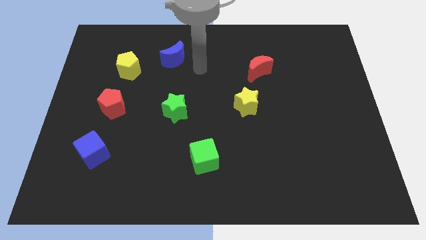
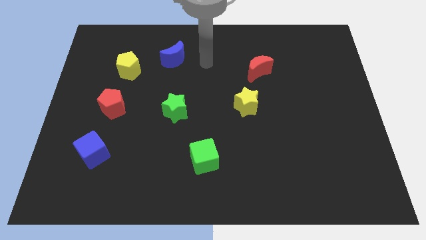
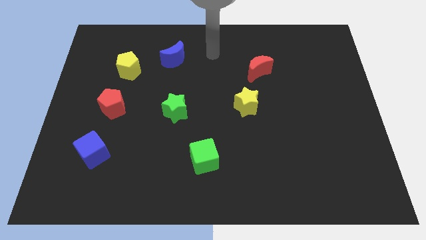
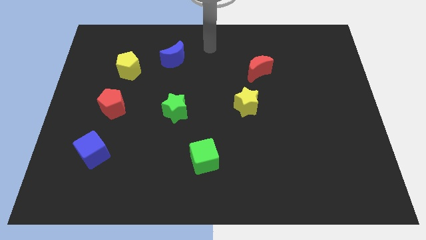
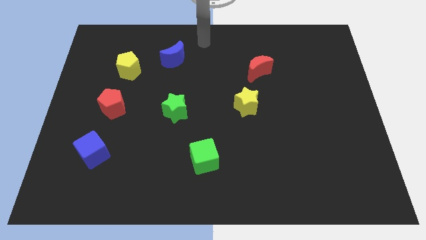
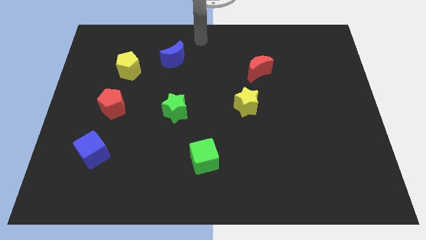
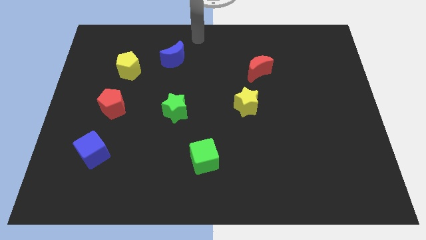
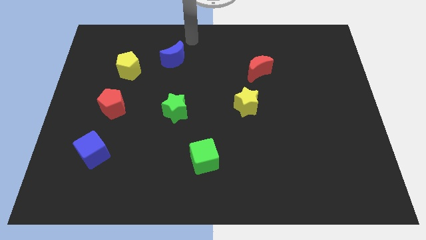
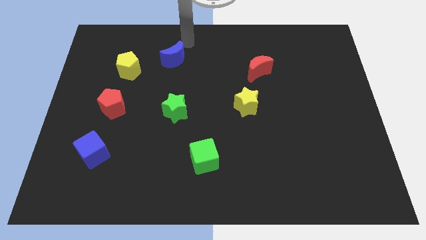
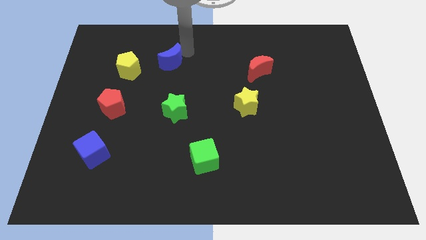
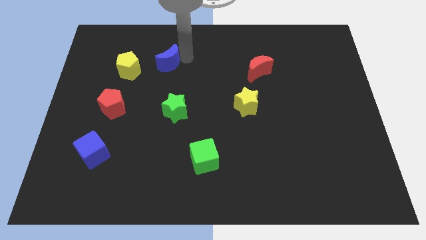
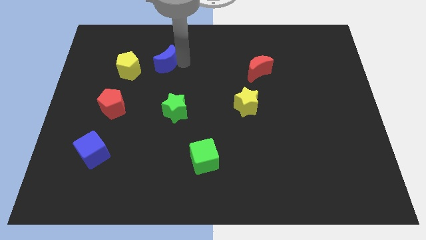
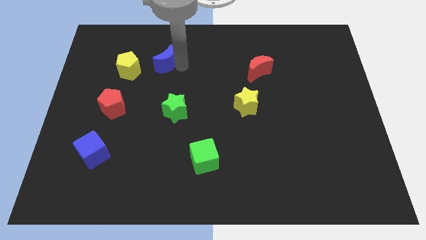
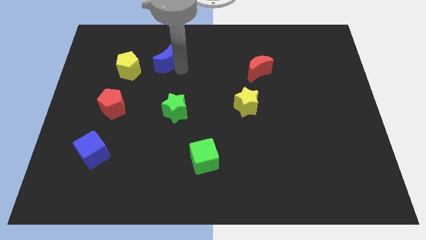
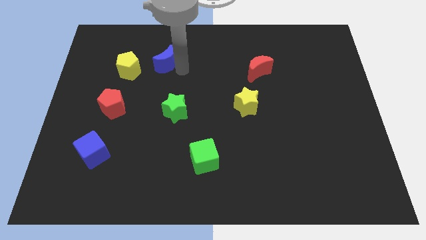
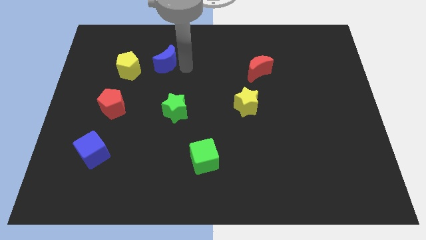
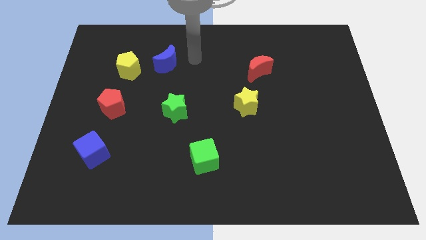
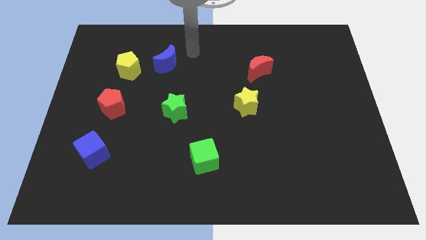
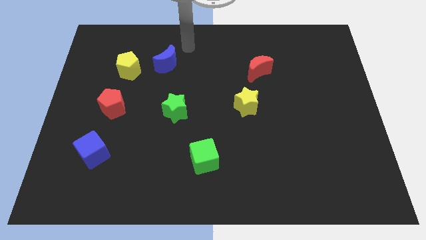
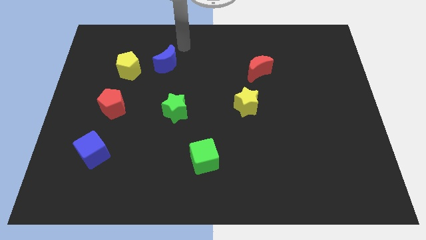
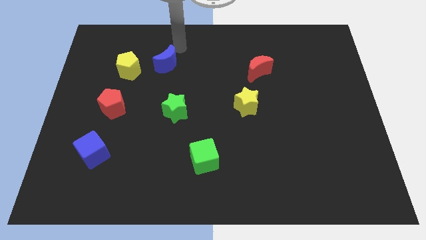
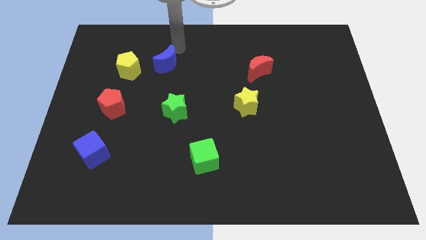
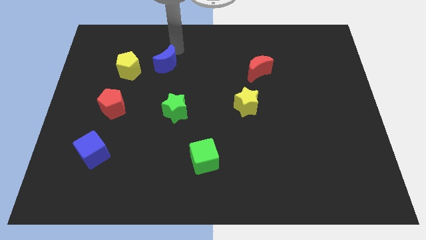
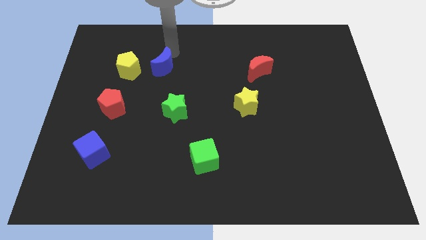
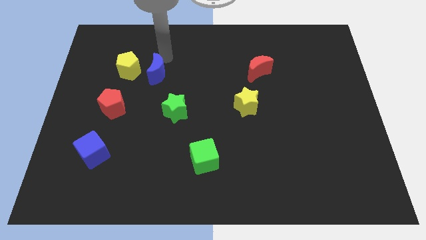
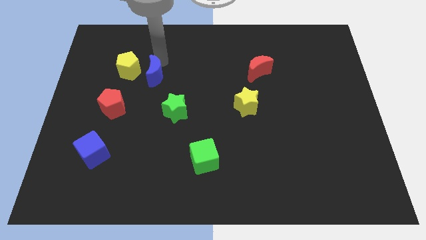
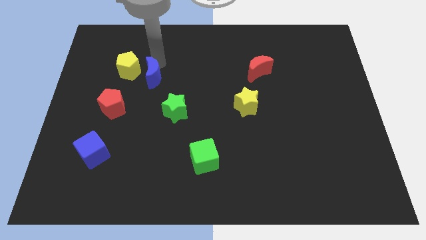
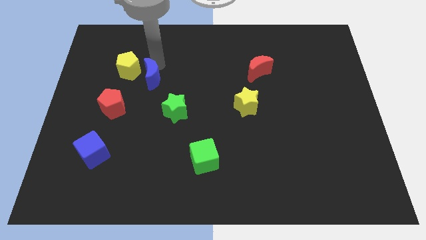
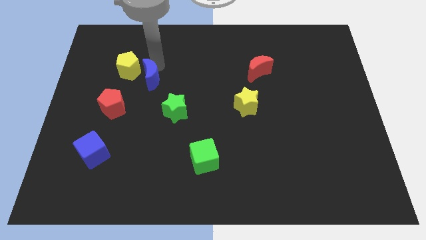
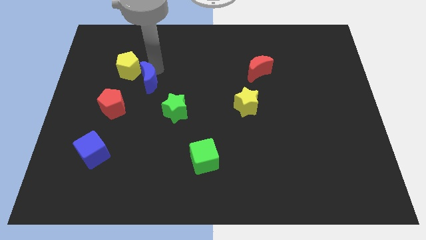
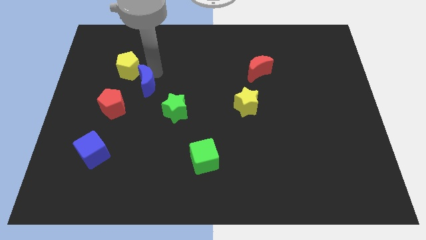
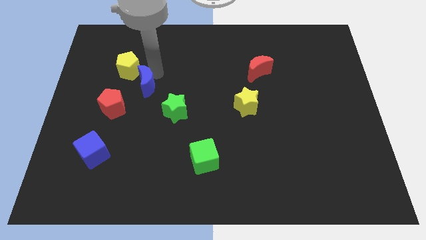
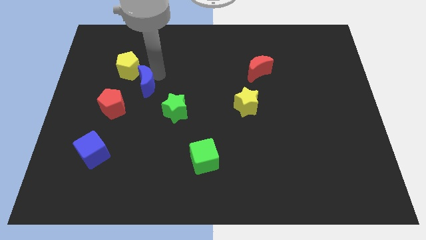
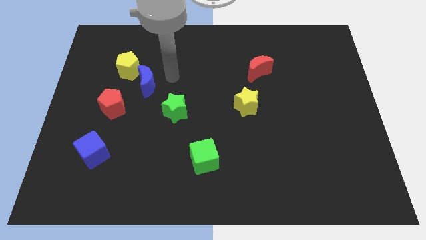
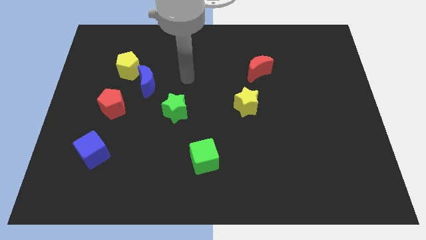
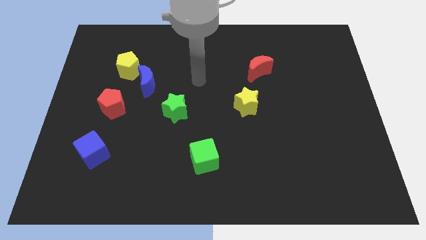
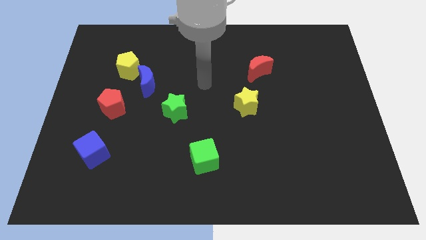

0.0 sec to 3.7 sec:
drag the blue moon diagonally top left to the green star

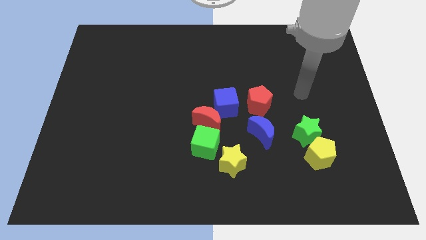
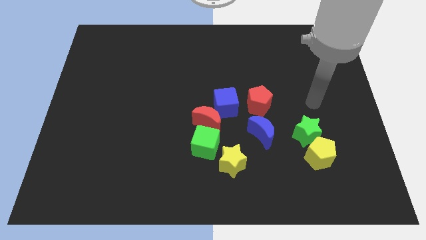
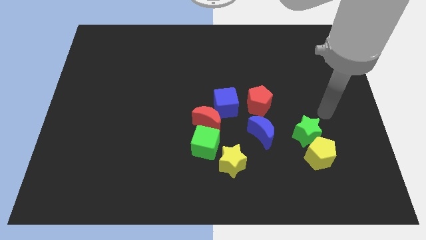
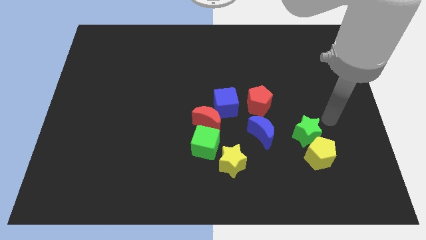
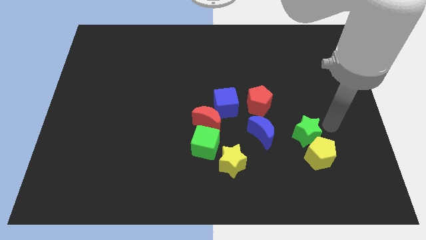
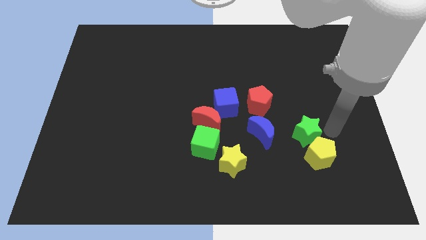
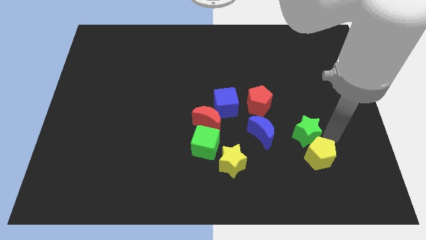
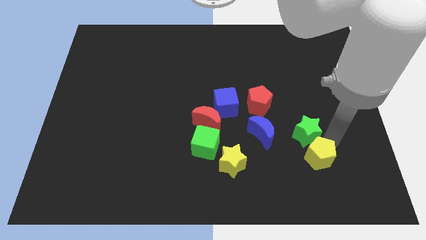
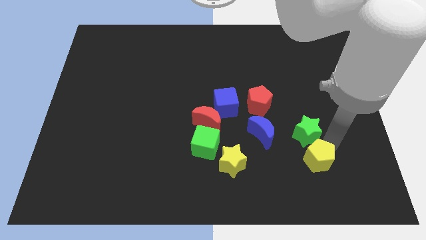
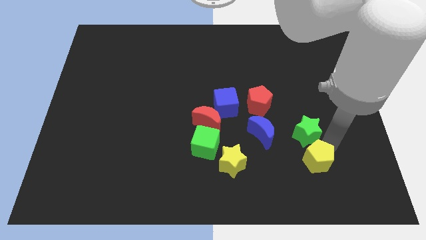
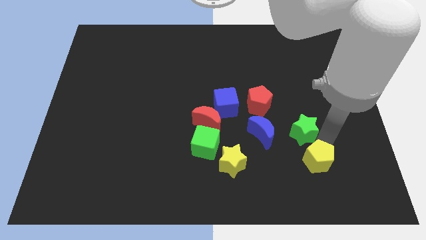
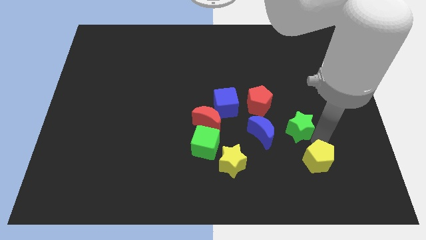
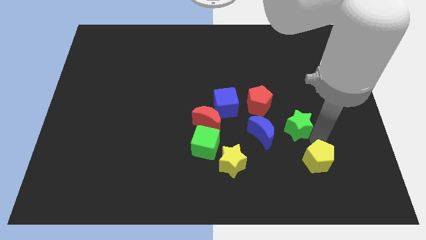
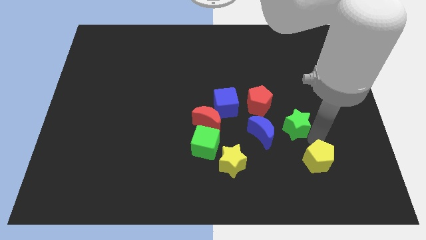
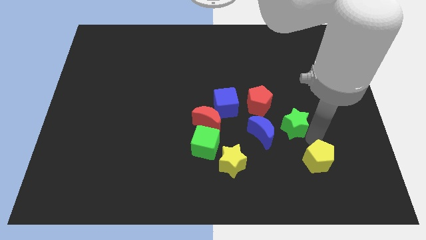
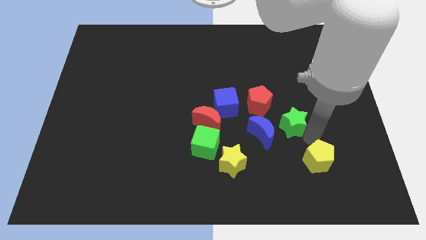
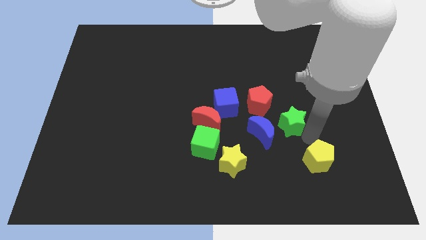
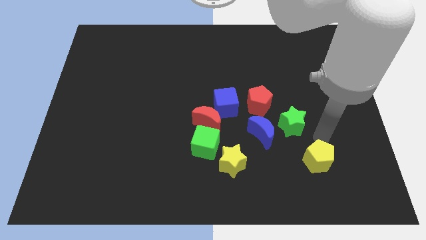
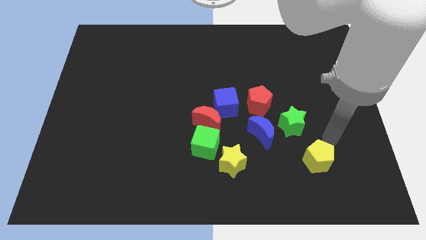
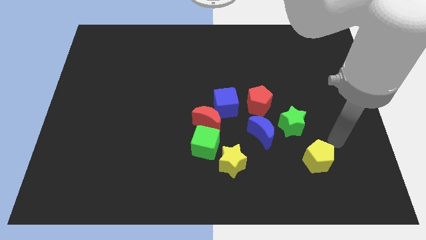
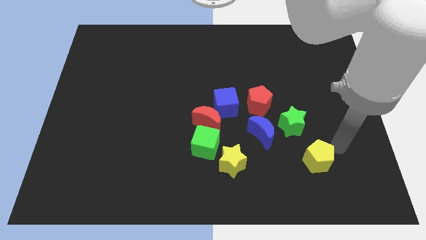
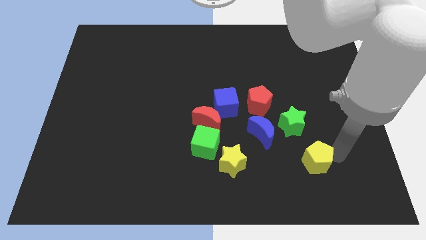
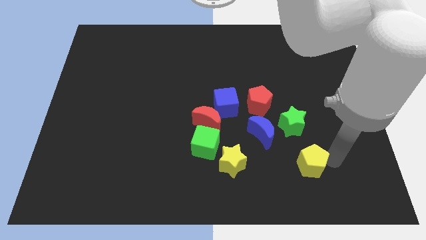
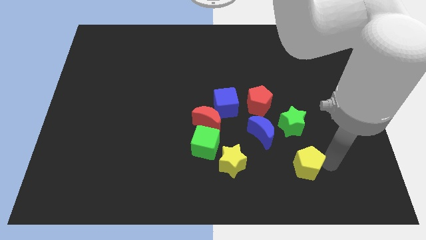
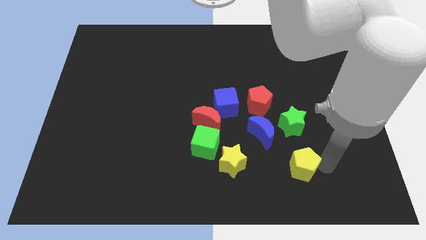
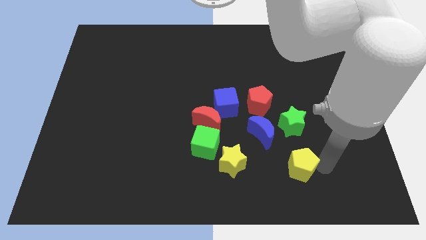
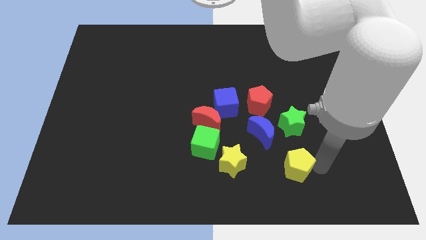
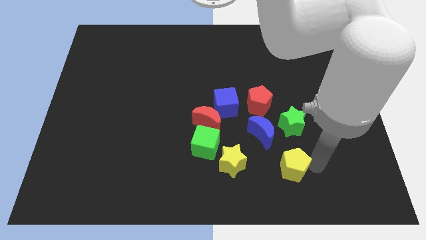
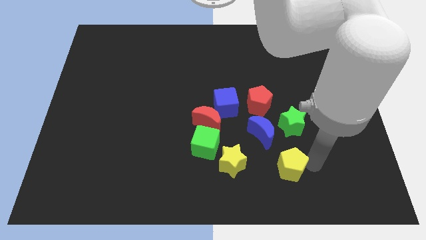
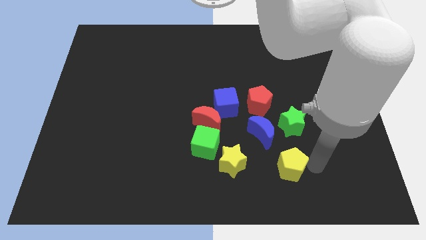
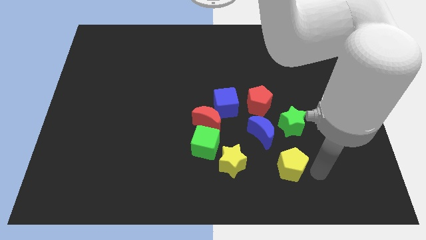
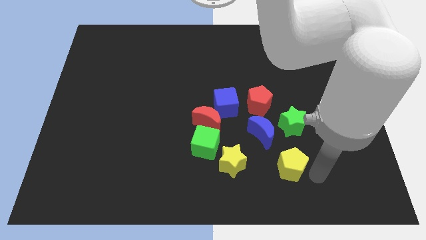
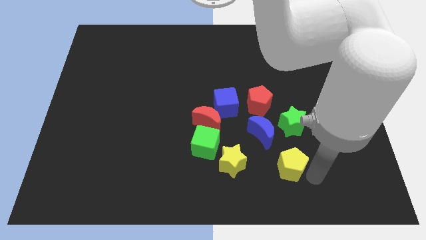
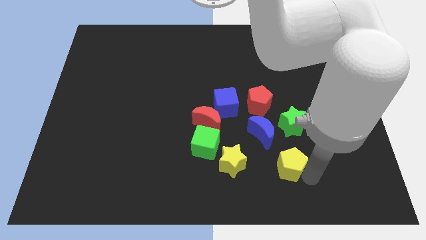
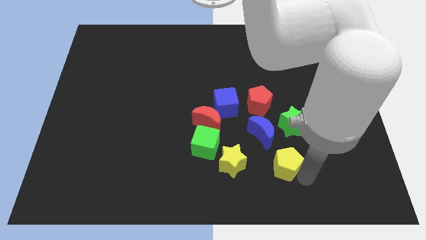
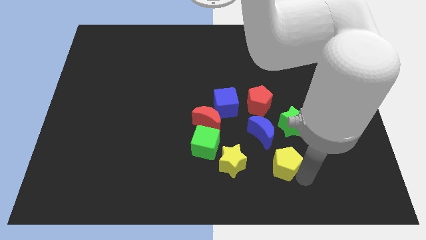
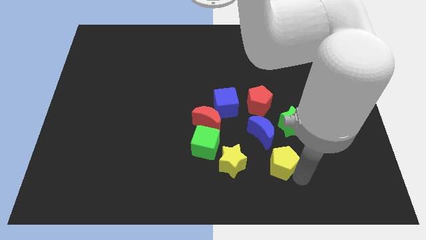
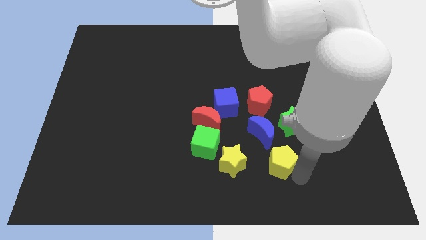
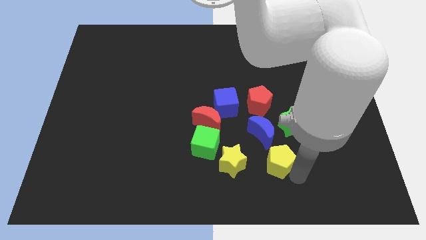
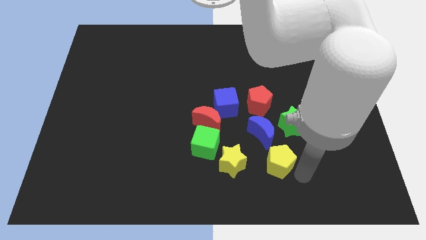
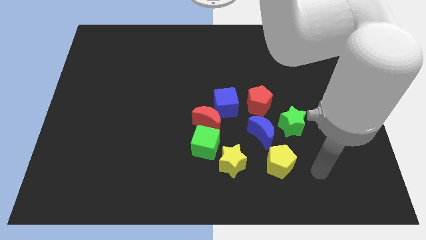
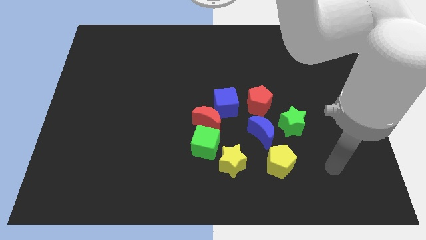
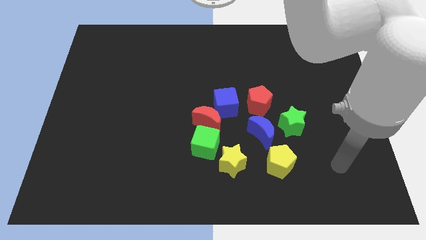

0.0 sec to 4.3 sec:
move yellow pentagon to the bottom of blue crescent

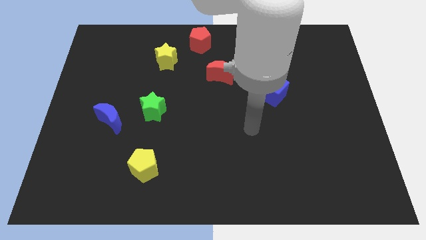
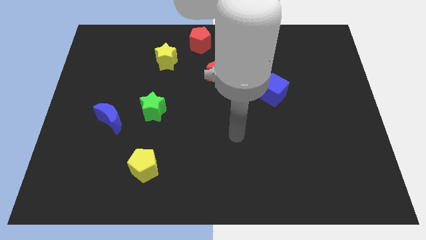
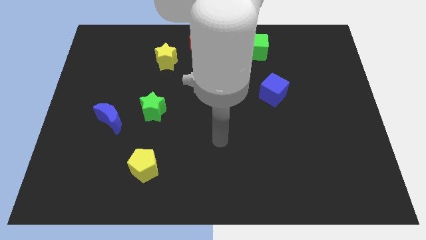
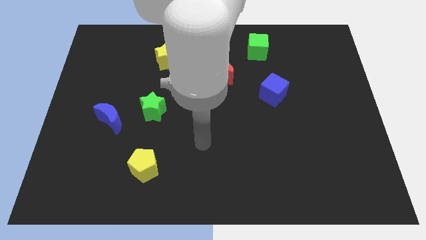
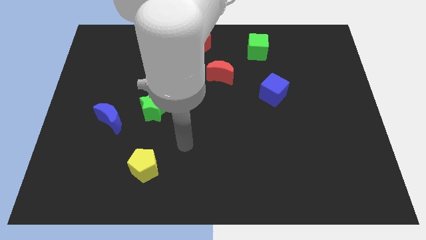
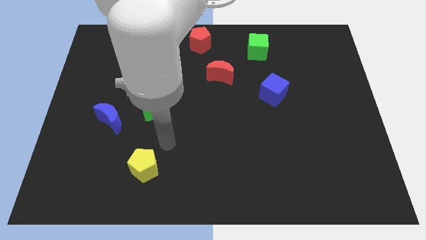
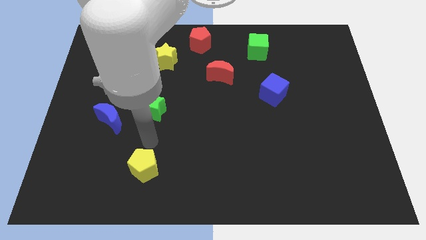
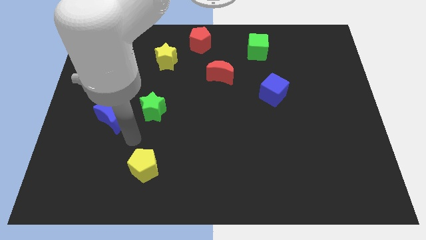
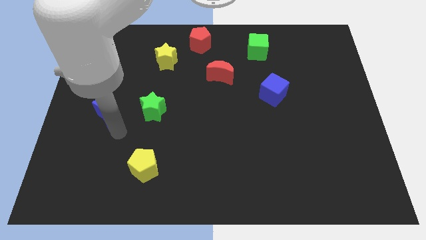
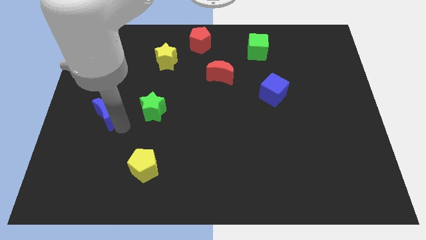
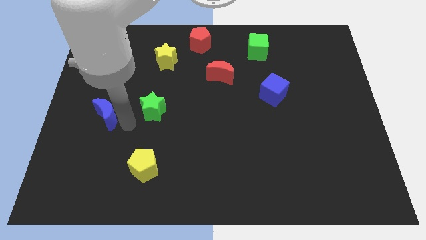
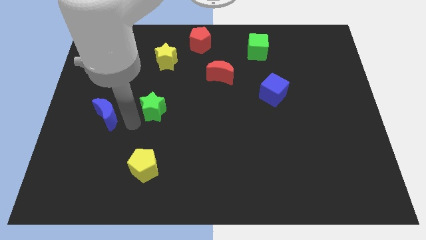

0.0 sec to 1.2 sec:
move your arm to the left of the green star
